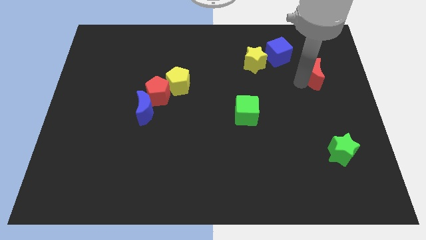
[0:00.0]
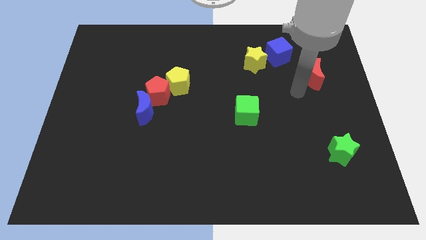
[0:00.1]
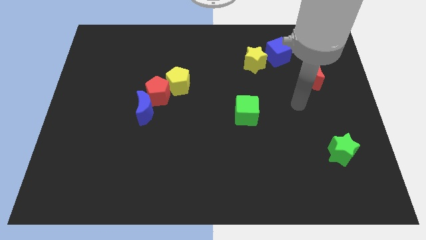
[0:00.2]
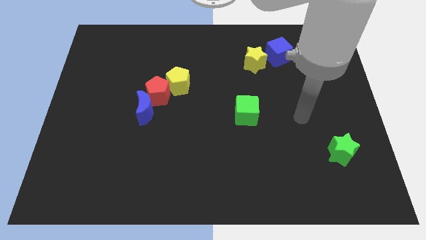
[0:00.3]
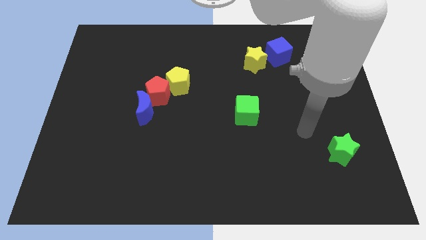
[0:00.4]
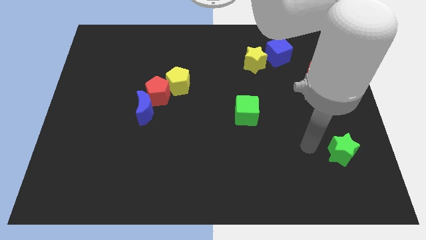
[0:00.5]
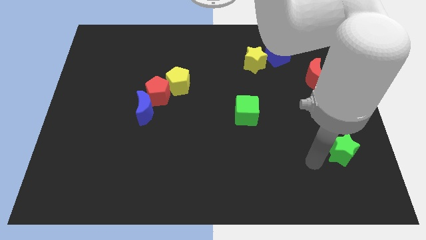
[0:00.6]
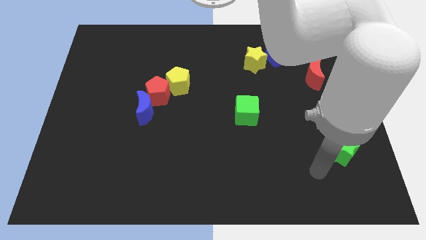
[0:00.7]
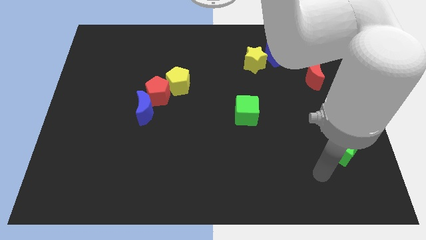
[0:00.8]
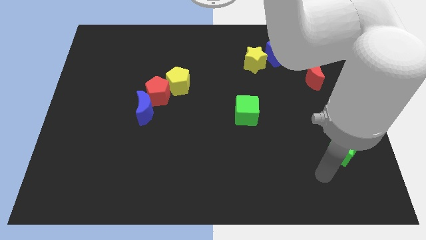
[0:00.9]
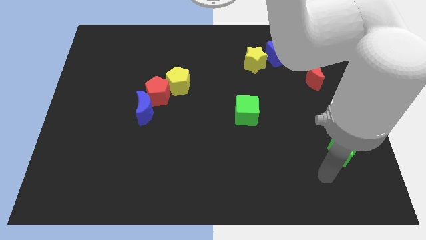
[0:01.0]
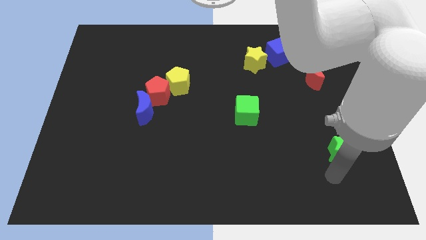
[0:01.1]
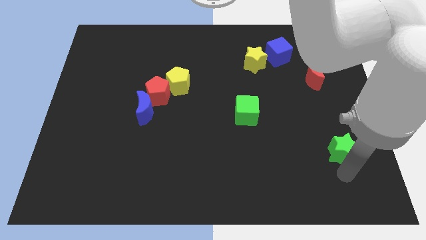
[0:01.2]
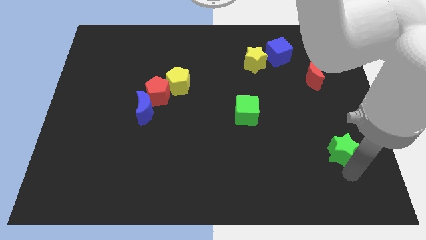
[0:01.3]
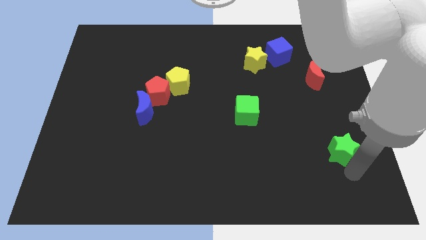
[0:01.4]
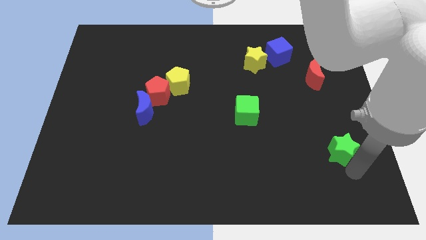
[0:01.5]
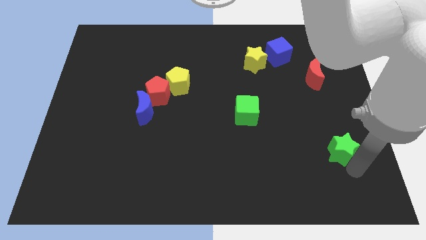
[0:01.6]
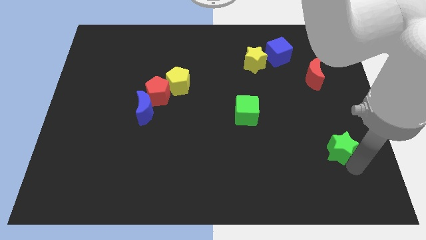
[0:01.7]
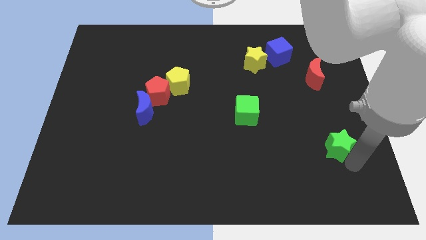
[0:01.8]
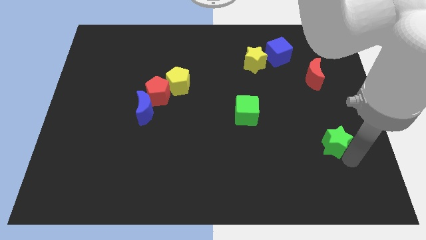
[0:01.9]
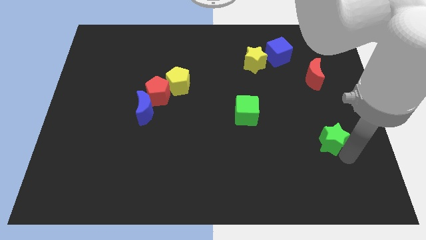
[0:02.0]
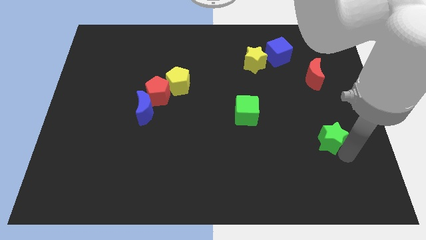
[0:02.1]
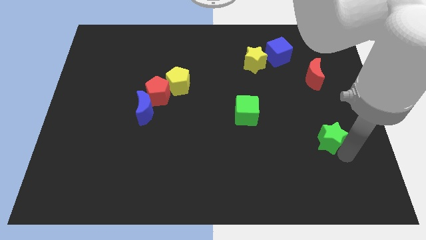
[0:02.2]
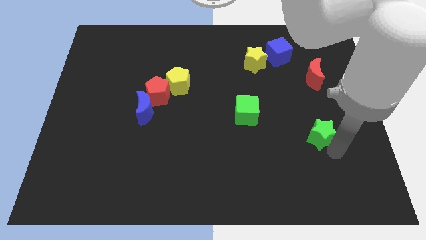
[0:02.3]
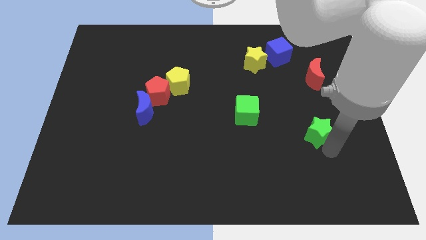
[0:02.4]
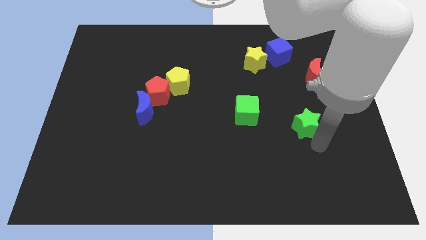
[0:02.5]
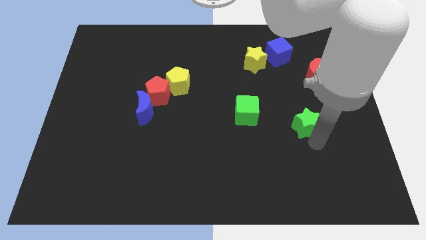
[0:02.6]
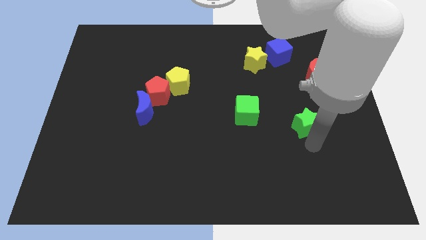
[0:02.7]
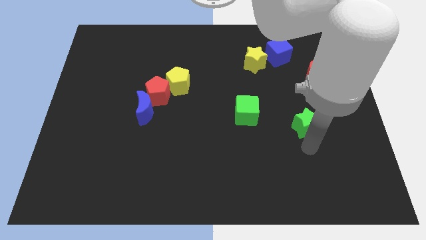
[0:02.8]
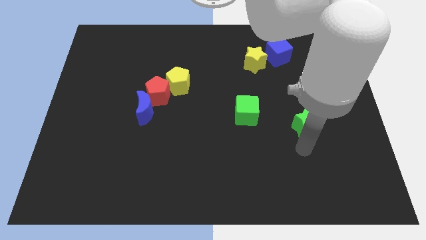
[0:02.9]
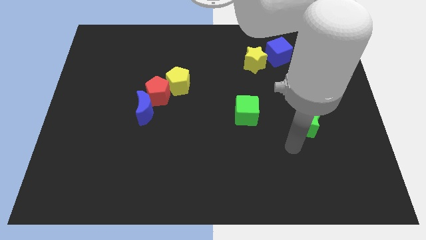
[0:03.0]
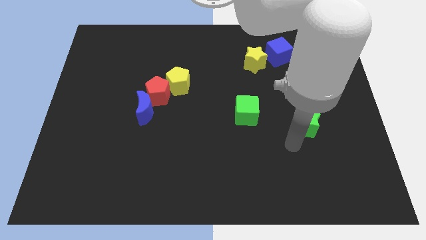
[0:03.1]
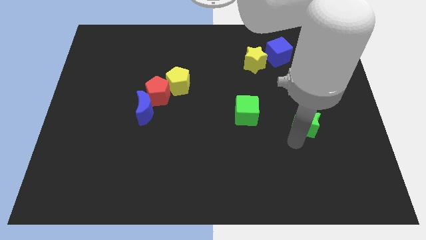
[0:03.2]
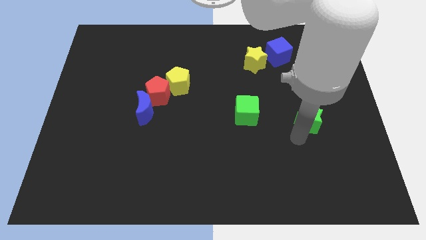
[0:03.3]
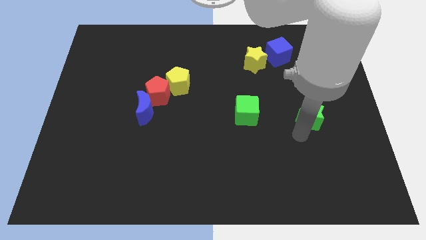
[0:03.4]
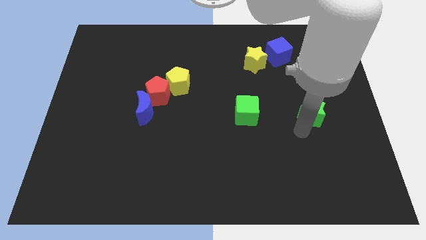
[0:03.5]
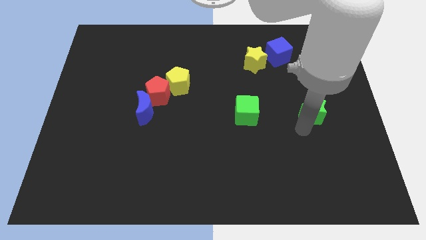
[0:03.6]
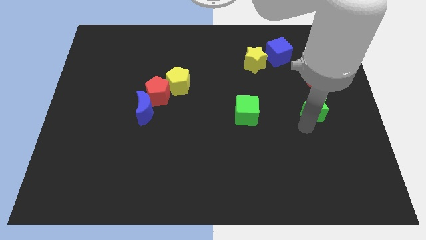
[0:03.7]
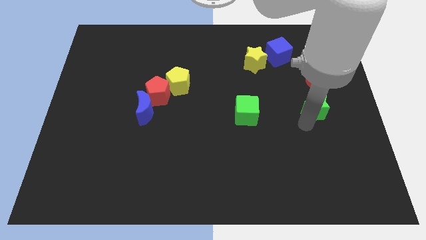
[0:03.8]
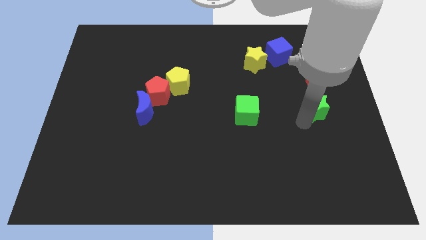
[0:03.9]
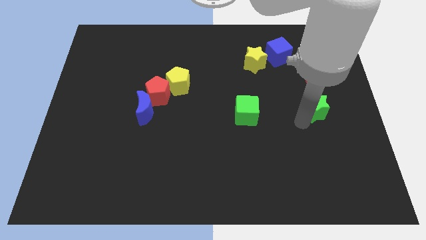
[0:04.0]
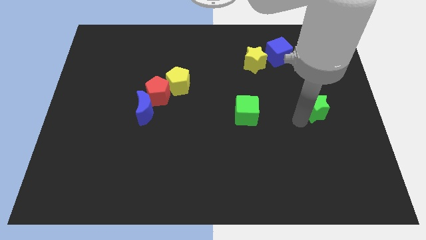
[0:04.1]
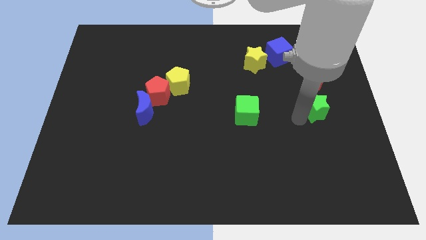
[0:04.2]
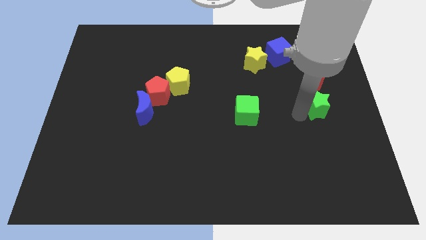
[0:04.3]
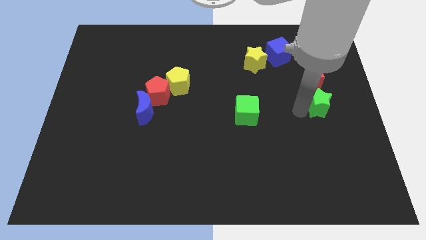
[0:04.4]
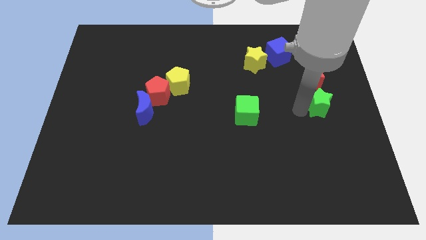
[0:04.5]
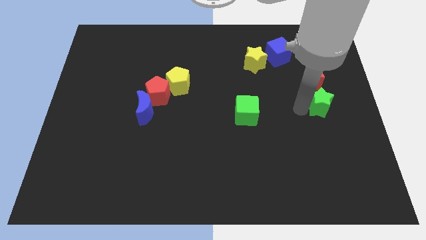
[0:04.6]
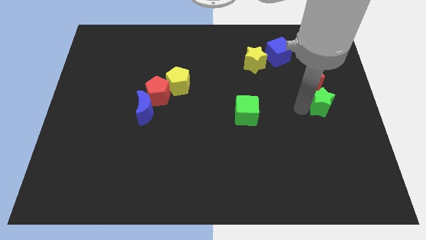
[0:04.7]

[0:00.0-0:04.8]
place the green star at the bottom of red crescent

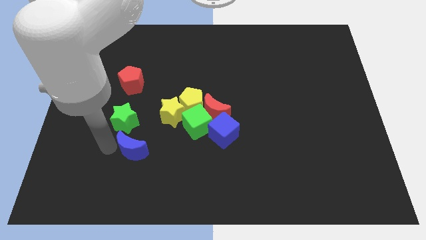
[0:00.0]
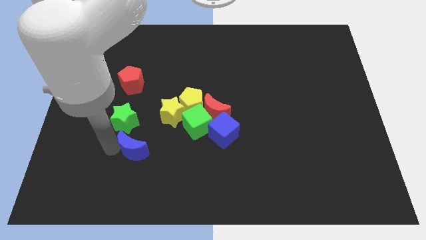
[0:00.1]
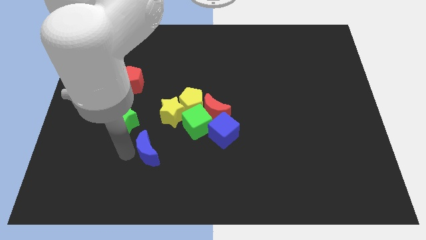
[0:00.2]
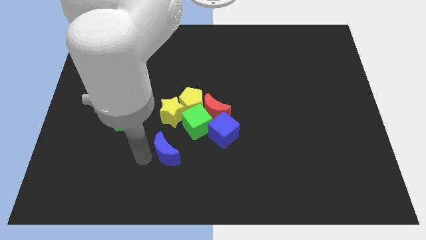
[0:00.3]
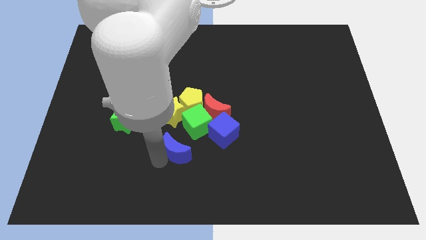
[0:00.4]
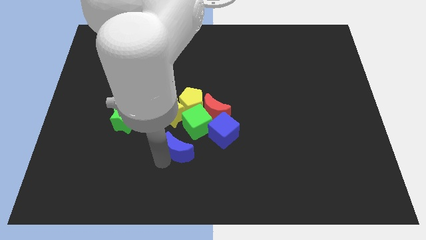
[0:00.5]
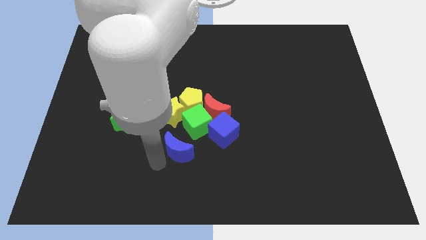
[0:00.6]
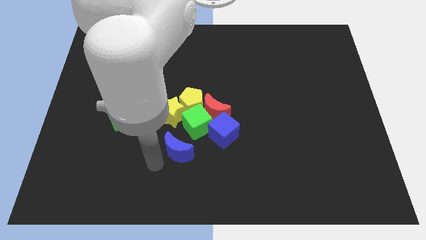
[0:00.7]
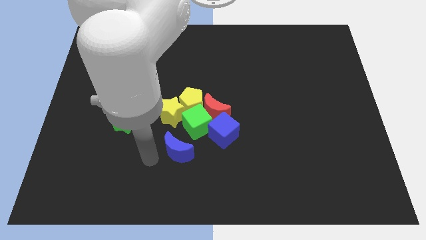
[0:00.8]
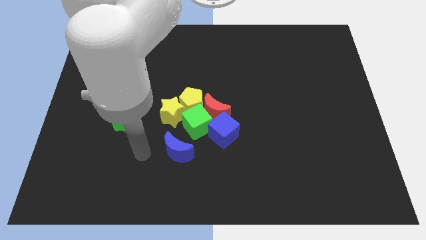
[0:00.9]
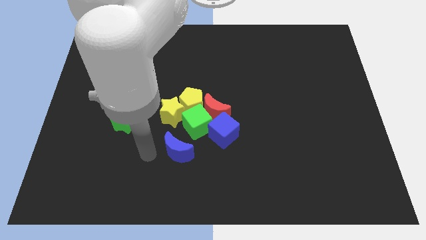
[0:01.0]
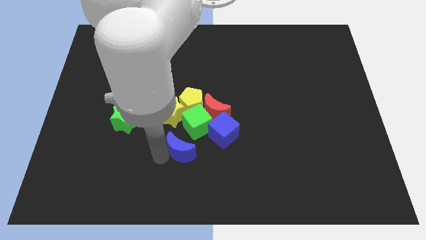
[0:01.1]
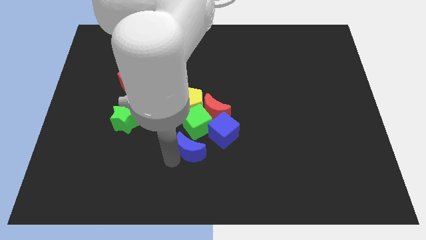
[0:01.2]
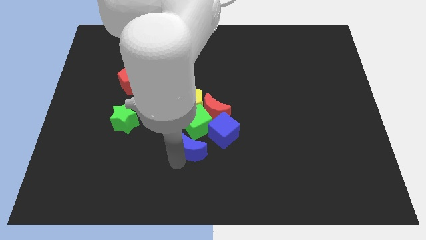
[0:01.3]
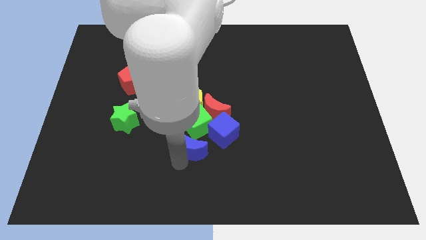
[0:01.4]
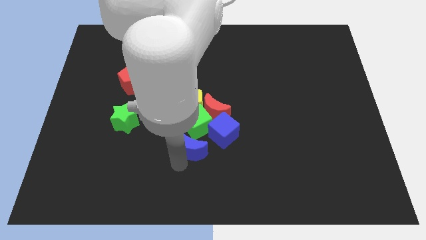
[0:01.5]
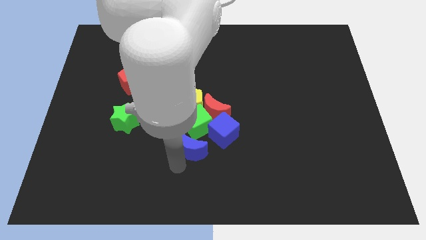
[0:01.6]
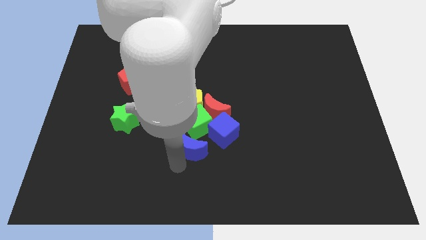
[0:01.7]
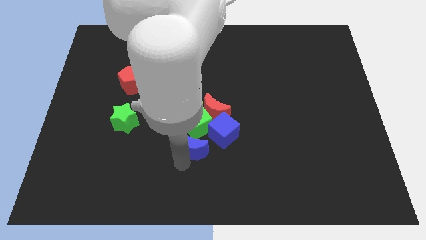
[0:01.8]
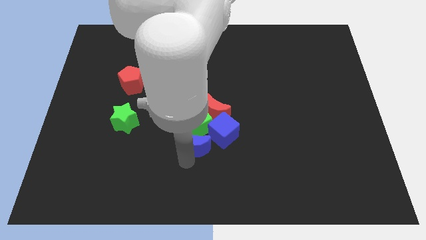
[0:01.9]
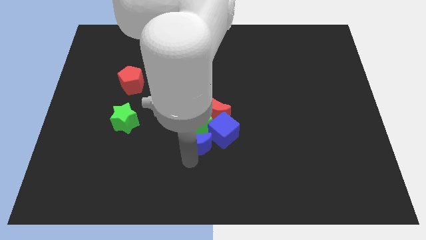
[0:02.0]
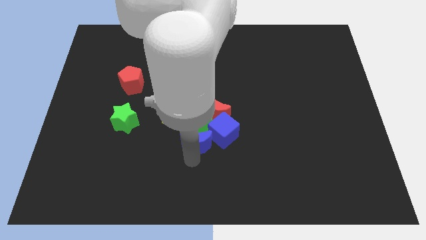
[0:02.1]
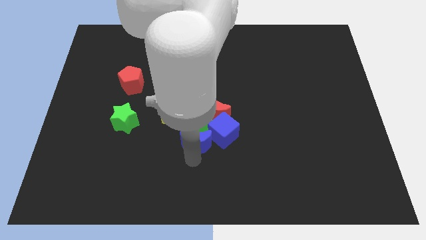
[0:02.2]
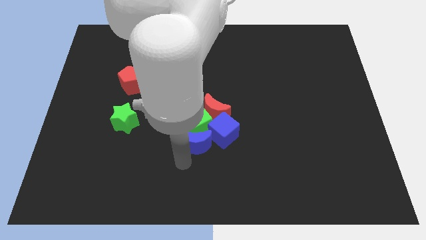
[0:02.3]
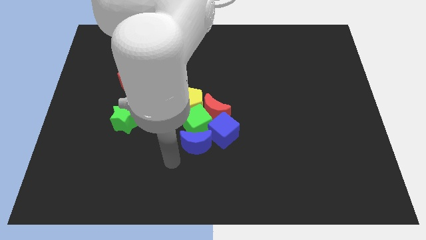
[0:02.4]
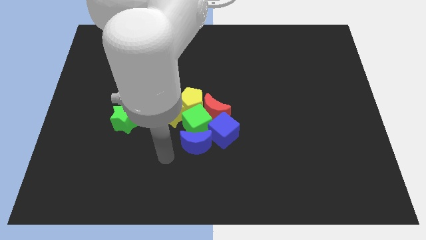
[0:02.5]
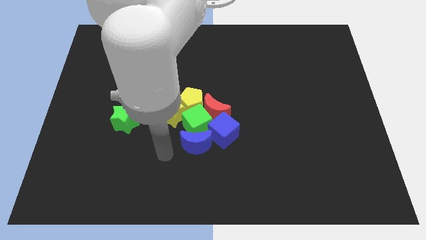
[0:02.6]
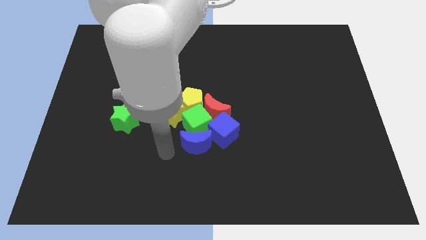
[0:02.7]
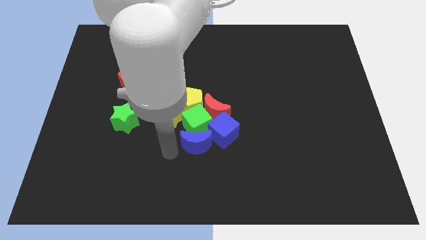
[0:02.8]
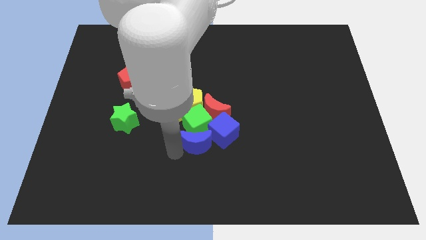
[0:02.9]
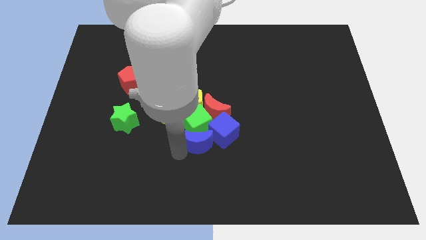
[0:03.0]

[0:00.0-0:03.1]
place the blue crescent at the bottom of the green cube

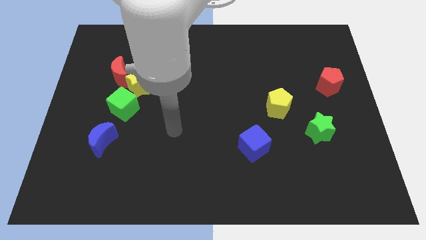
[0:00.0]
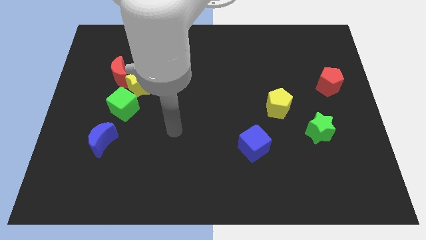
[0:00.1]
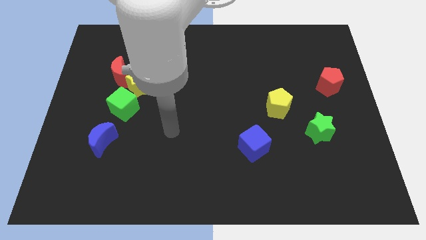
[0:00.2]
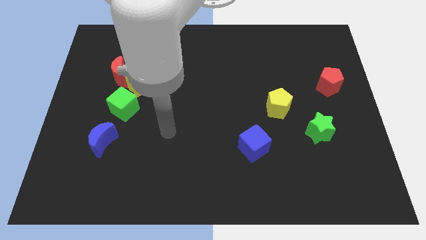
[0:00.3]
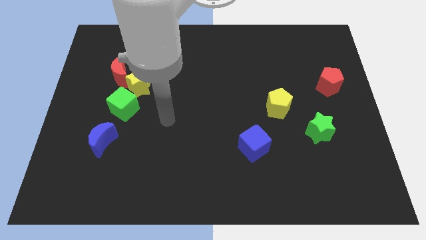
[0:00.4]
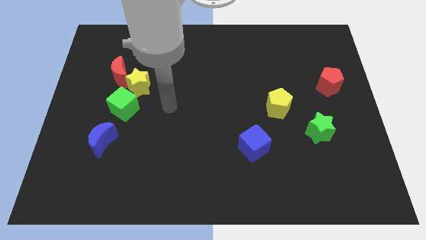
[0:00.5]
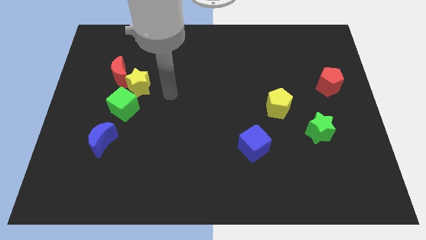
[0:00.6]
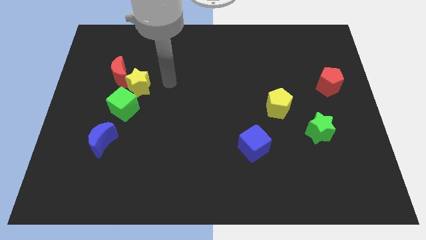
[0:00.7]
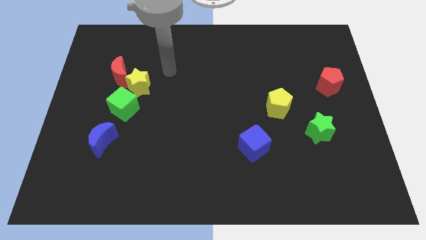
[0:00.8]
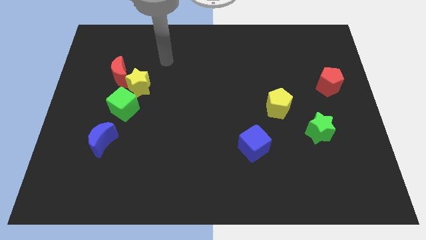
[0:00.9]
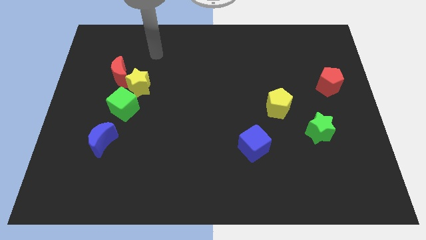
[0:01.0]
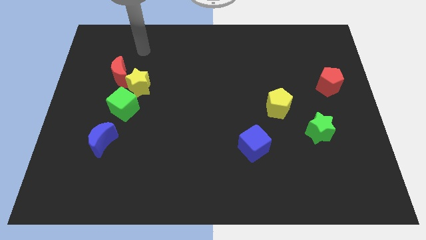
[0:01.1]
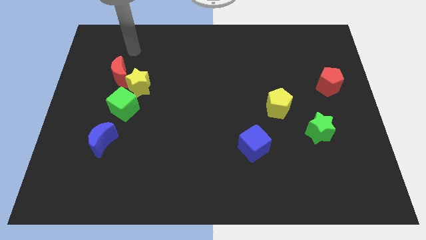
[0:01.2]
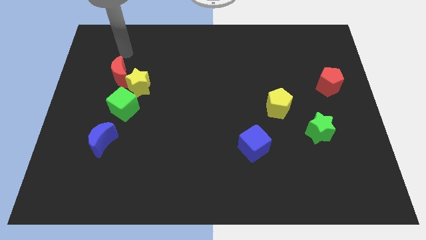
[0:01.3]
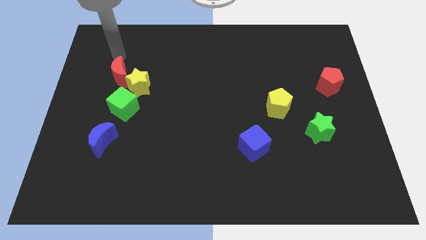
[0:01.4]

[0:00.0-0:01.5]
point the arm above the red moon
